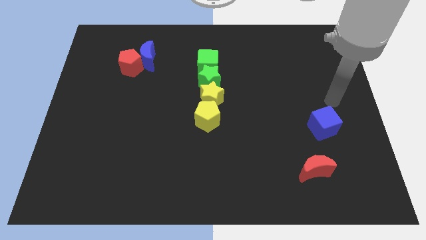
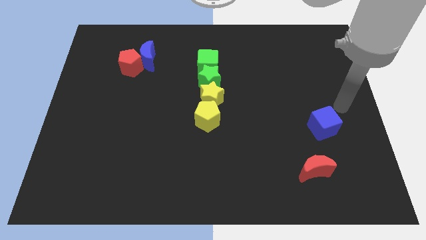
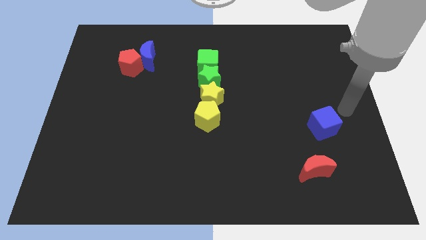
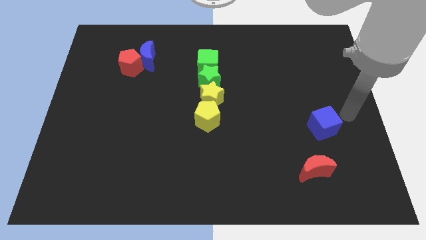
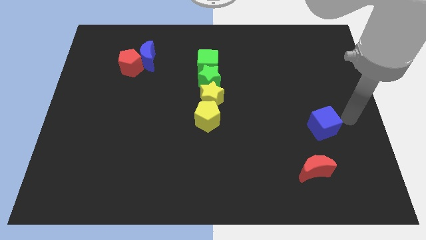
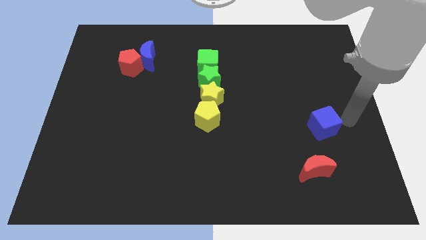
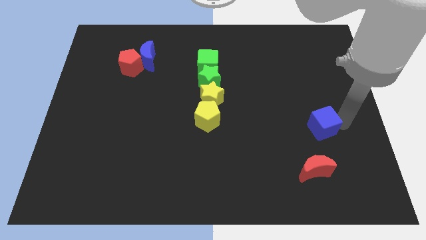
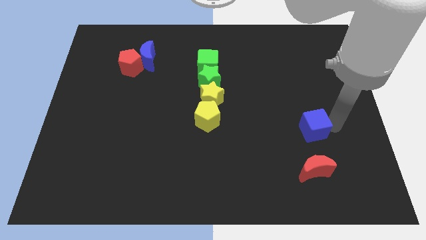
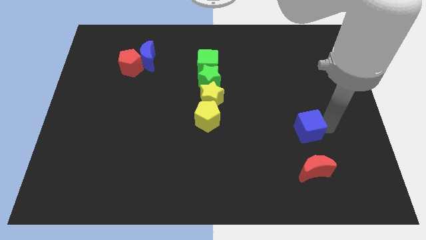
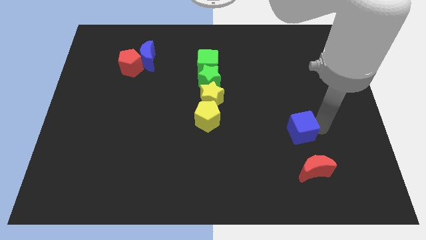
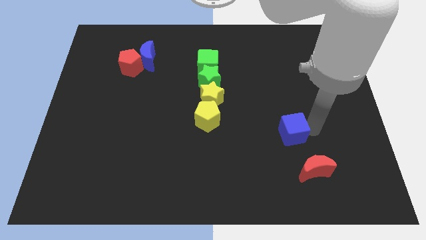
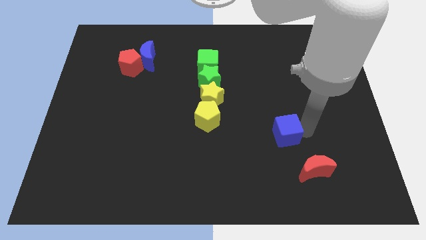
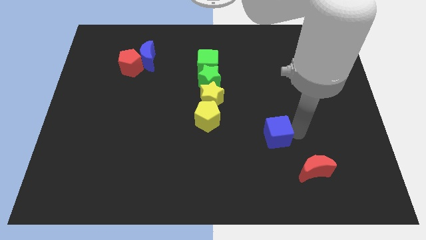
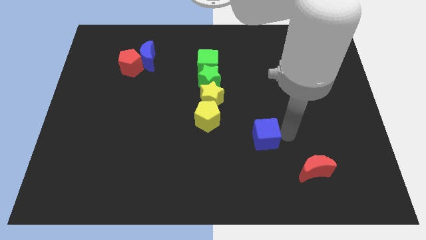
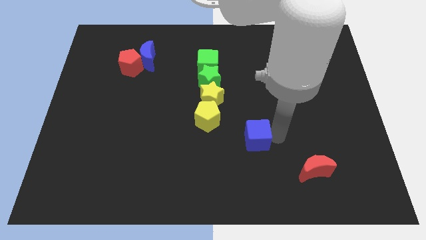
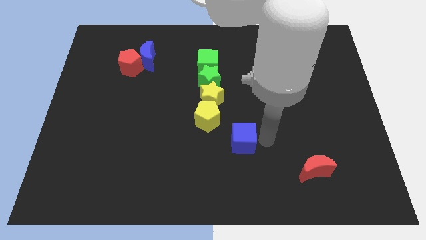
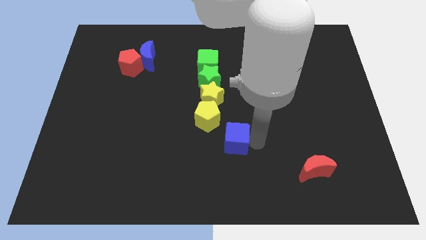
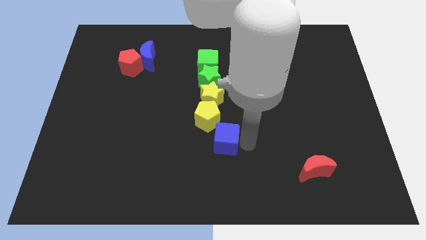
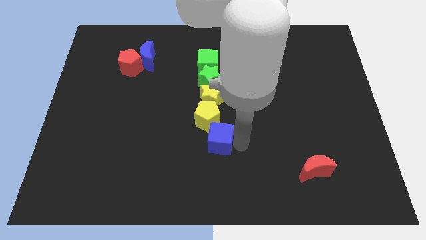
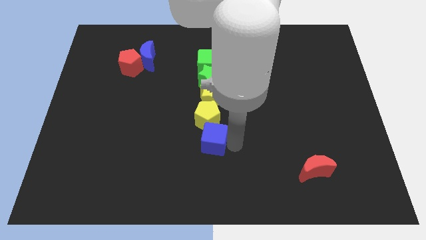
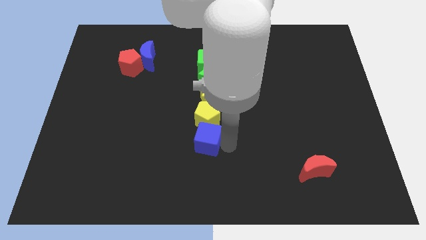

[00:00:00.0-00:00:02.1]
slide the blue cube to the bottom of yellow pentagon

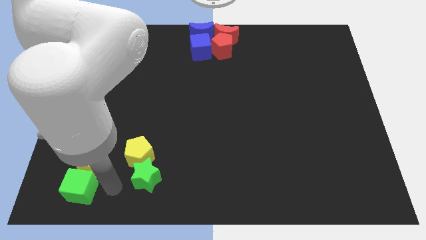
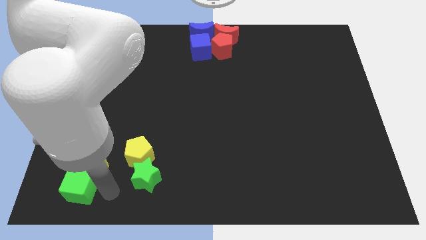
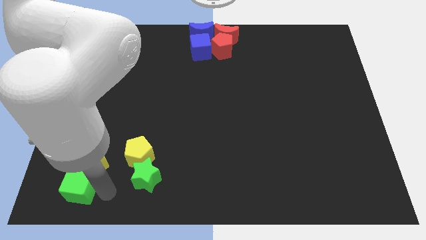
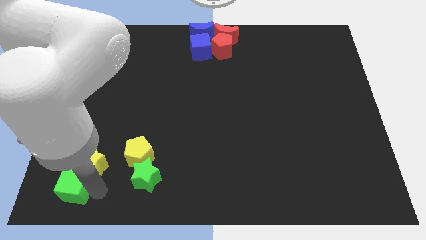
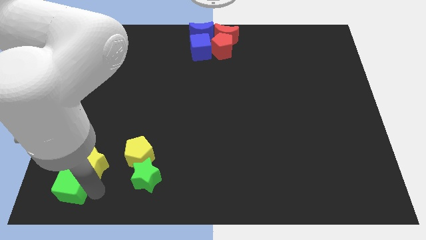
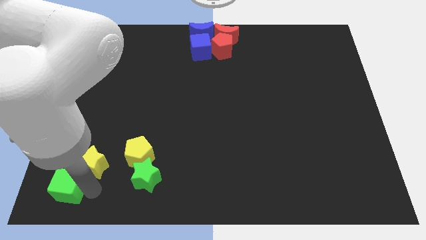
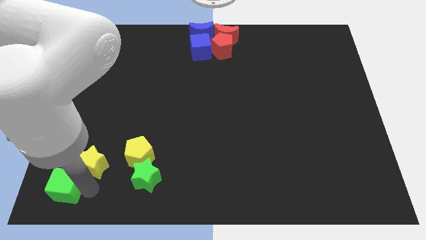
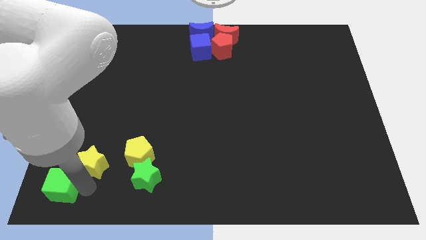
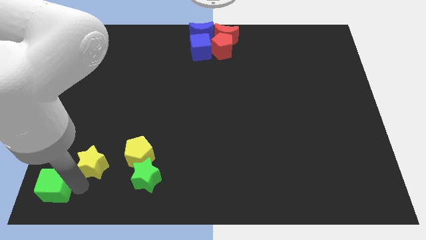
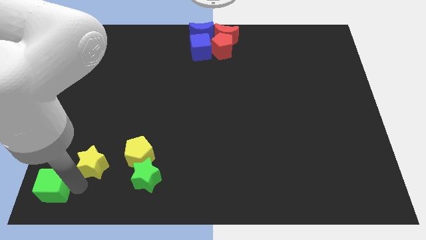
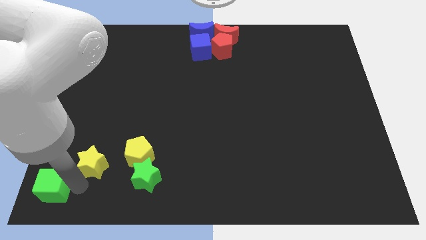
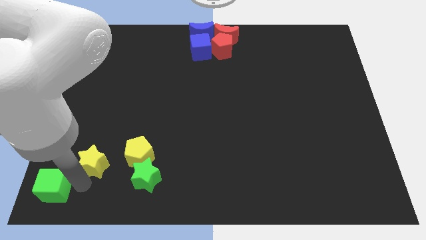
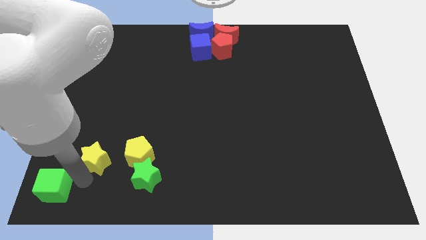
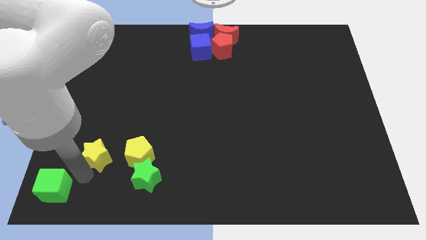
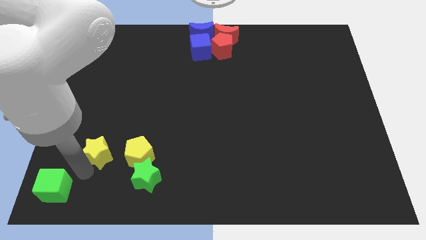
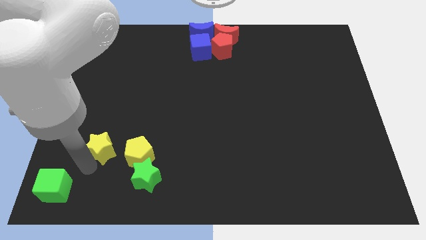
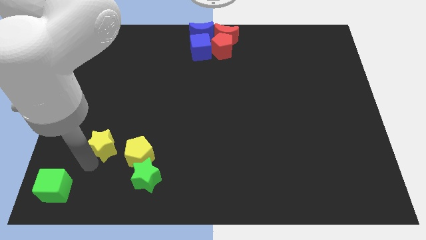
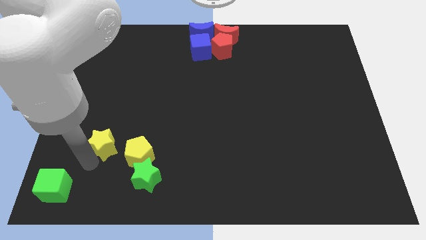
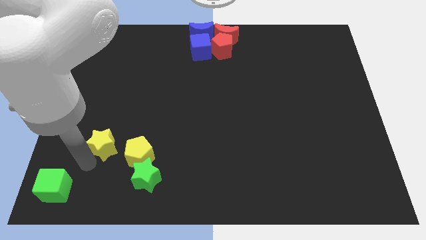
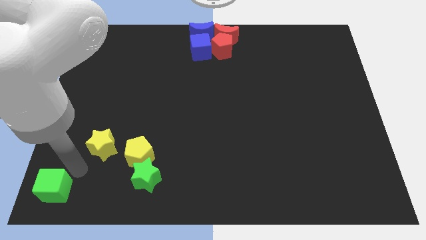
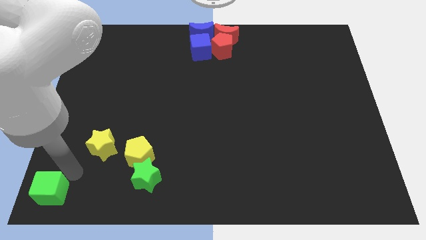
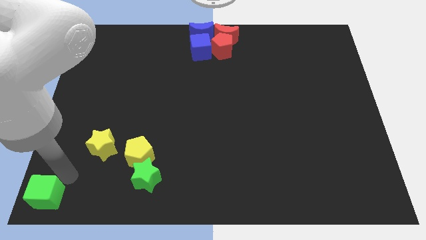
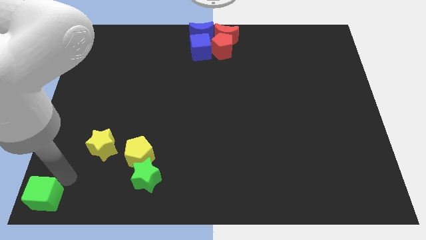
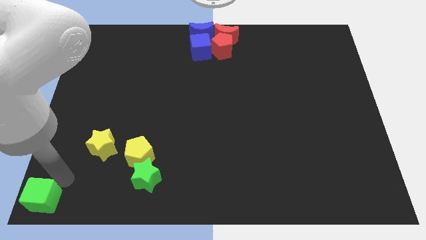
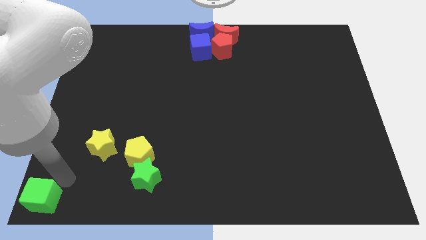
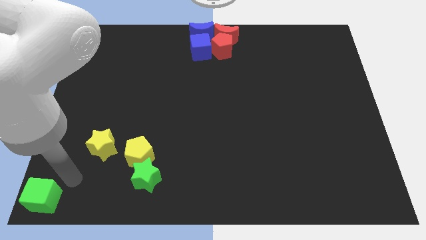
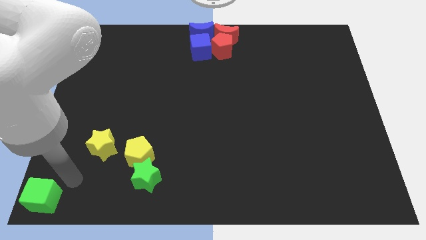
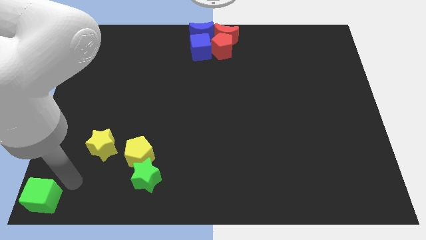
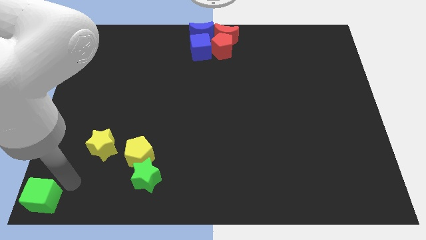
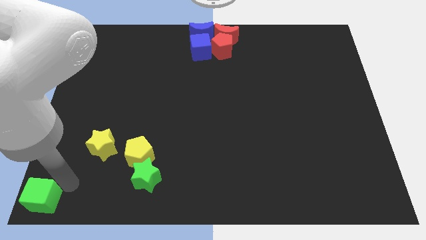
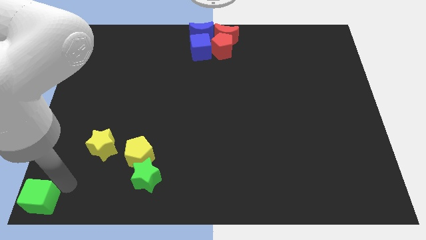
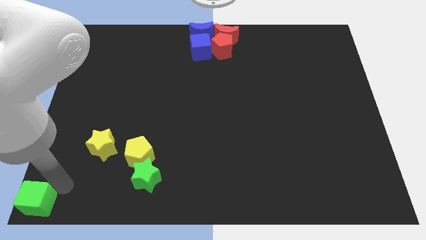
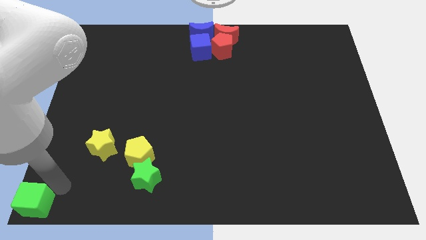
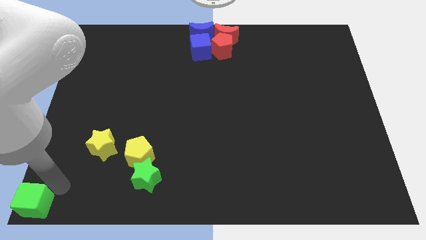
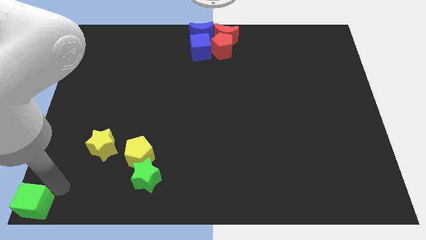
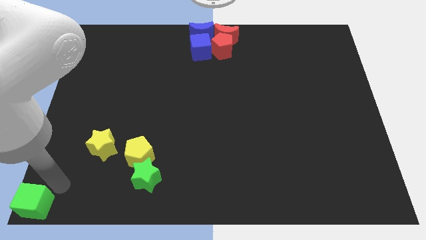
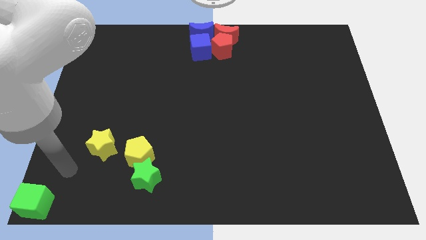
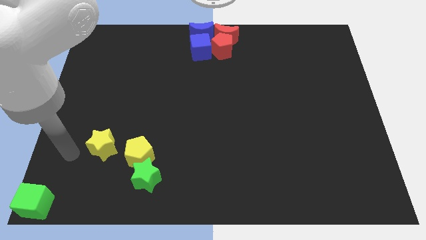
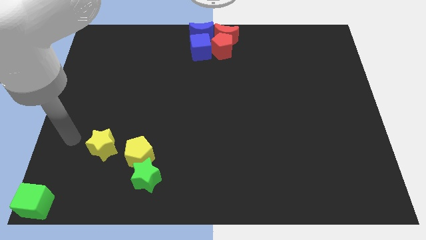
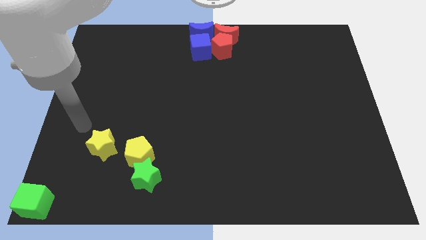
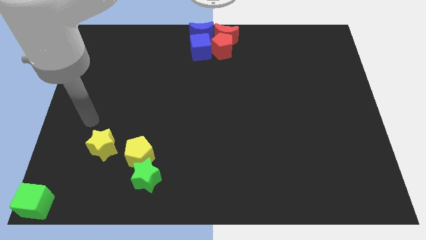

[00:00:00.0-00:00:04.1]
move the green cube to the bottom left corner of the board

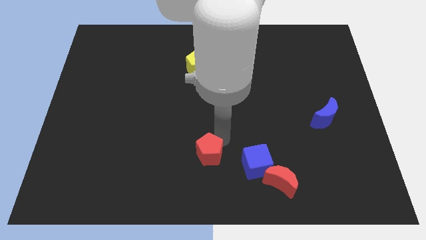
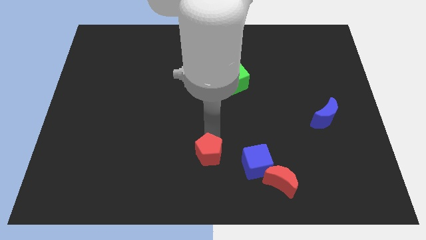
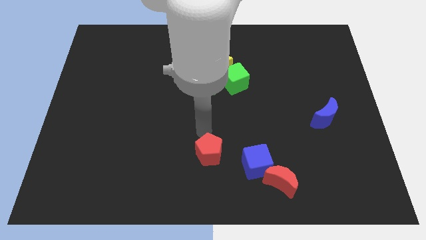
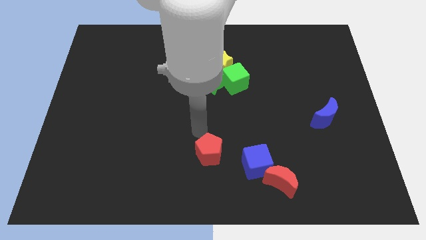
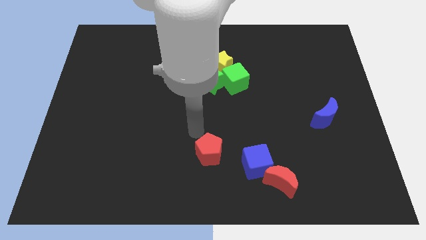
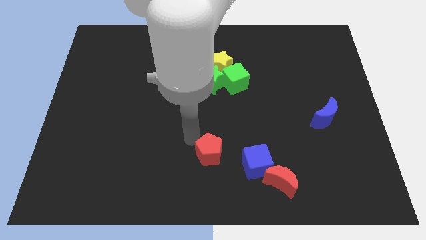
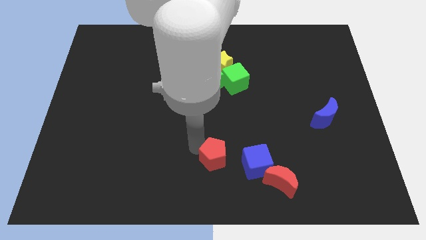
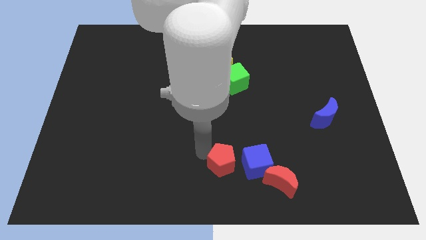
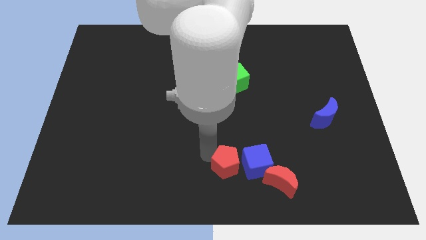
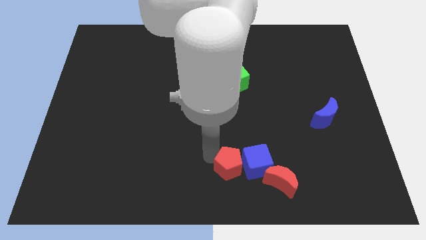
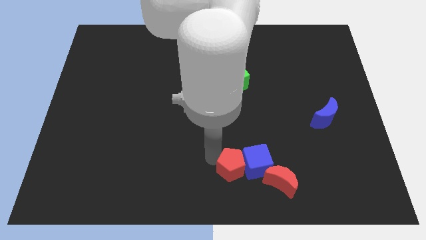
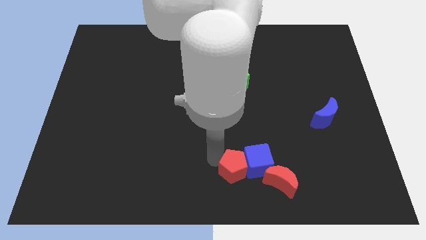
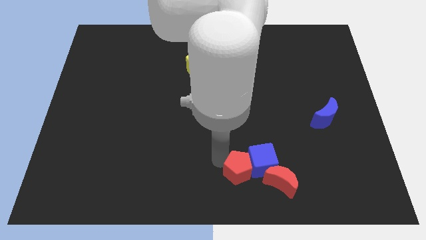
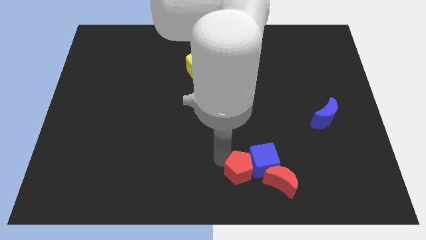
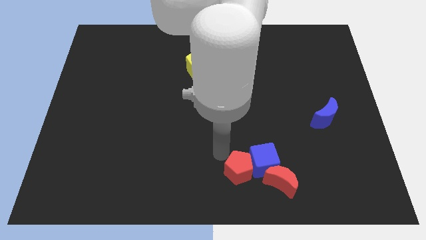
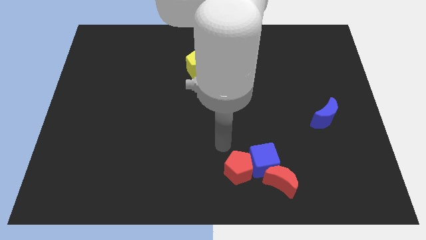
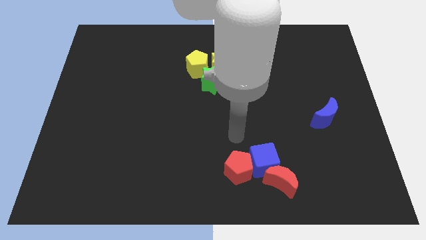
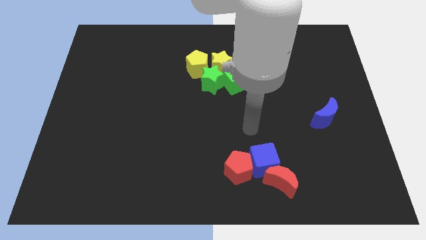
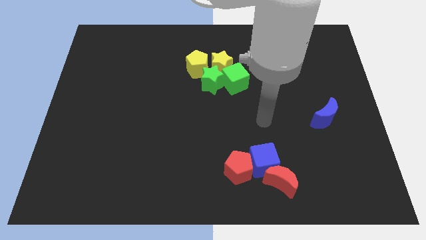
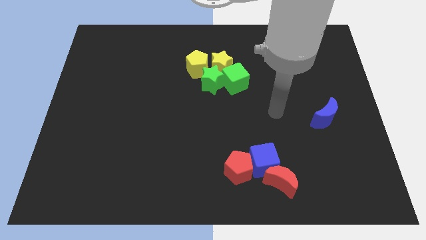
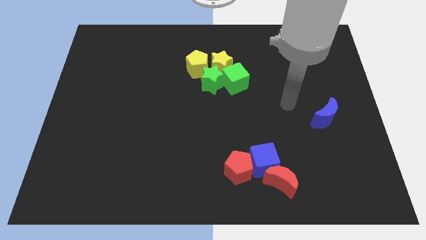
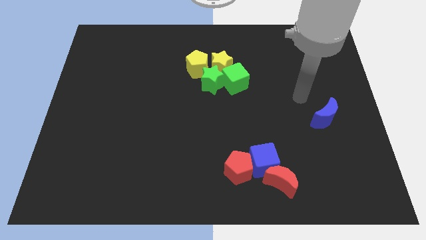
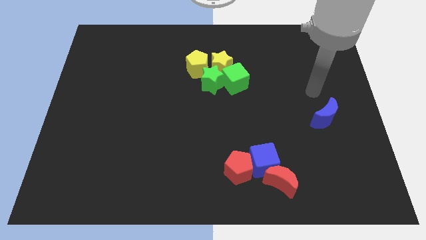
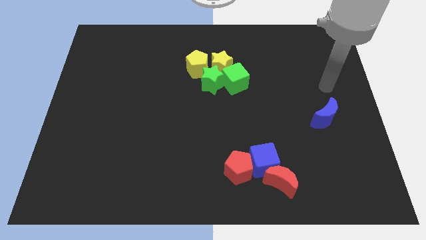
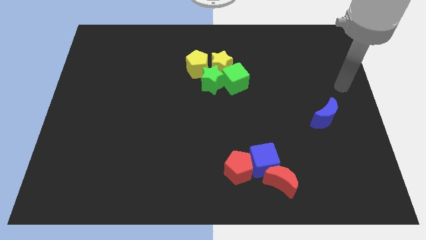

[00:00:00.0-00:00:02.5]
move the red pentagon to the left side of the blue cube

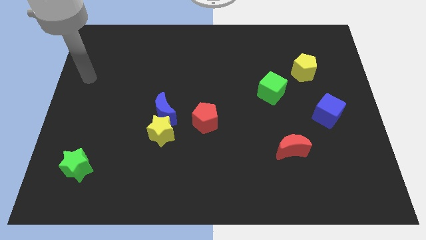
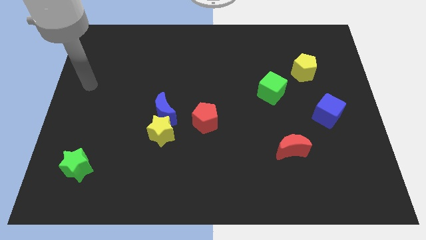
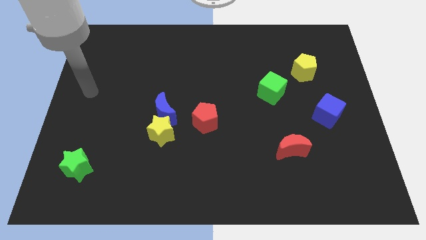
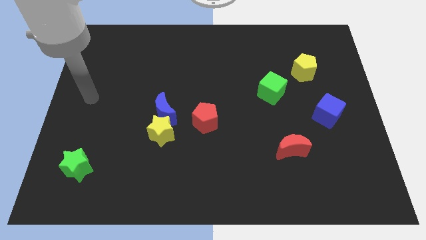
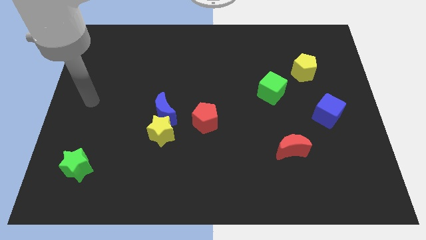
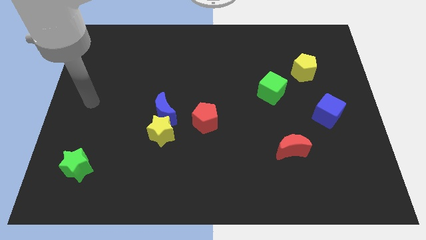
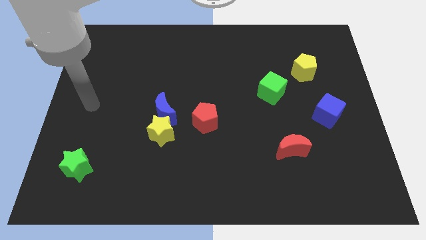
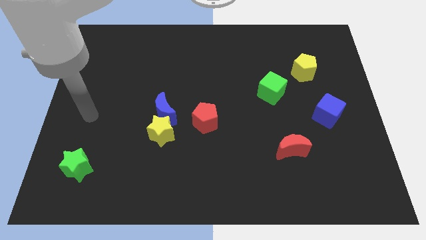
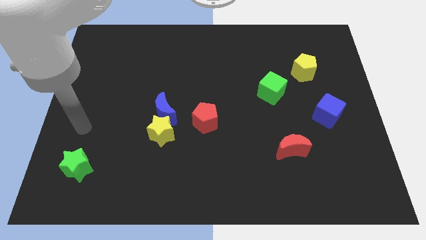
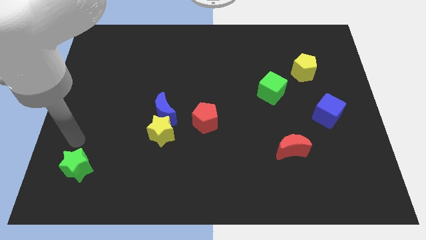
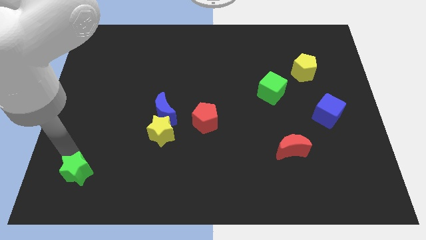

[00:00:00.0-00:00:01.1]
tap on the top left side of green star
